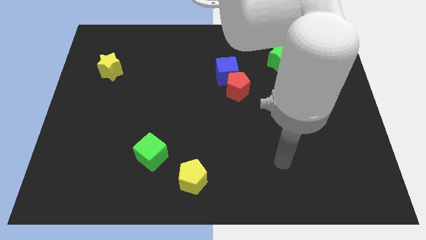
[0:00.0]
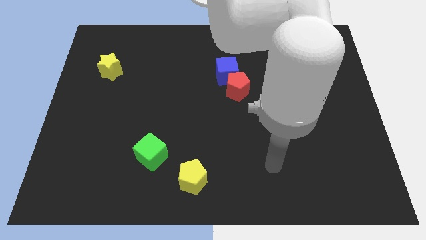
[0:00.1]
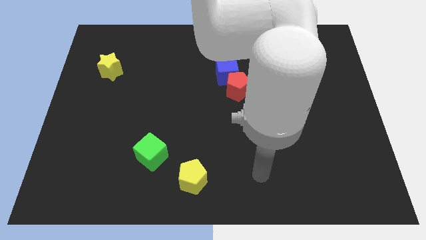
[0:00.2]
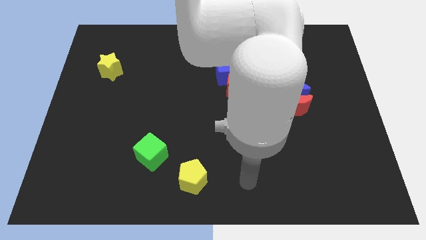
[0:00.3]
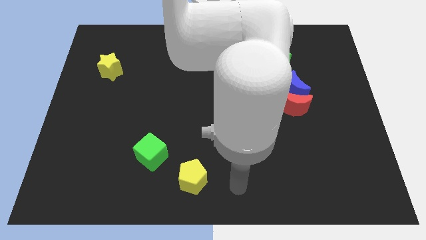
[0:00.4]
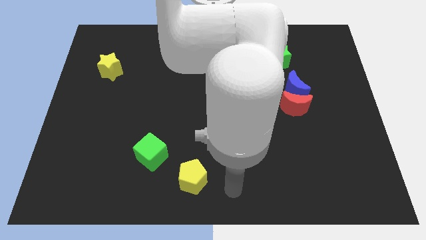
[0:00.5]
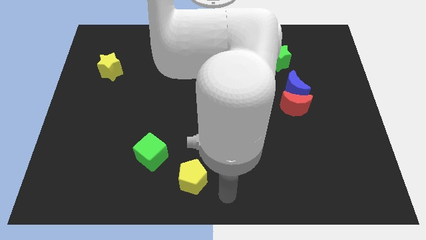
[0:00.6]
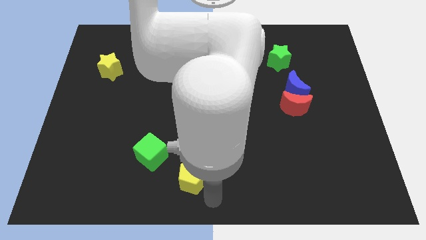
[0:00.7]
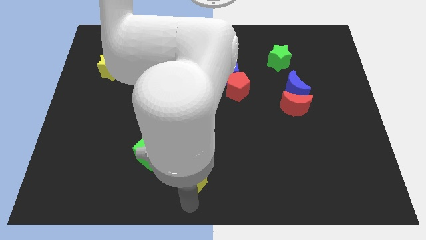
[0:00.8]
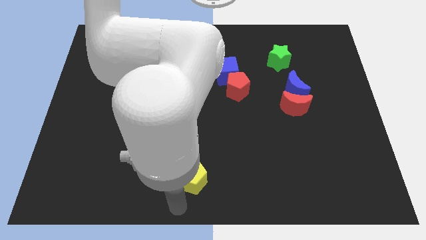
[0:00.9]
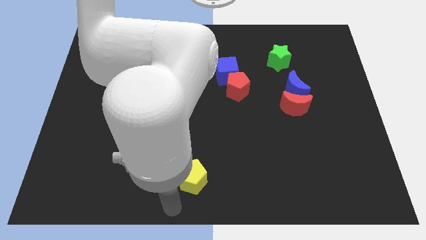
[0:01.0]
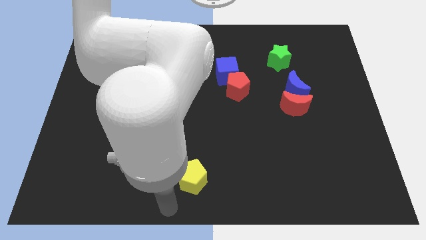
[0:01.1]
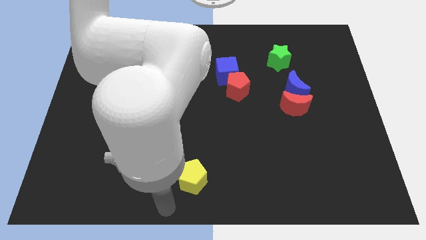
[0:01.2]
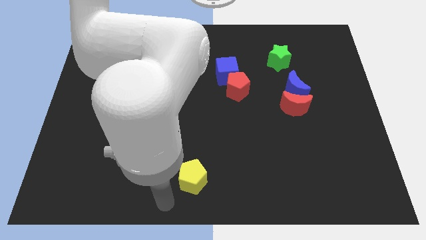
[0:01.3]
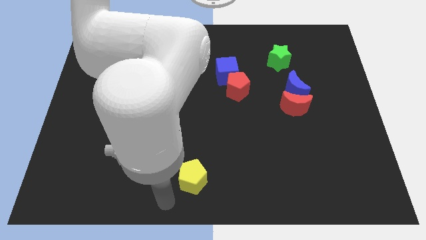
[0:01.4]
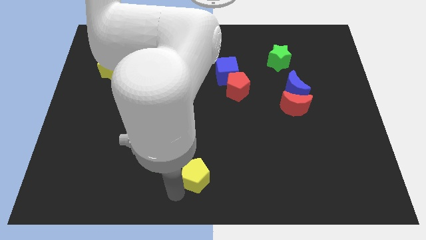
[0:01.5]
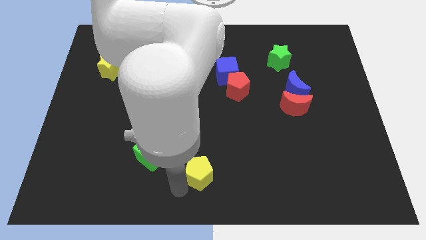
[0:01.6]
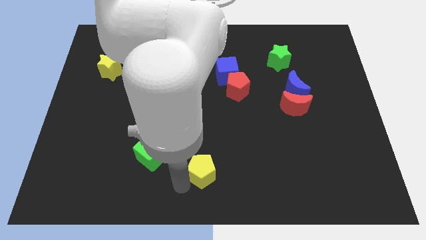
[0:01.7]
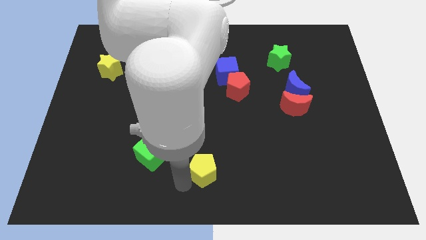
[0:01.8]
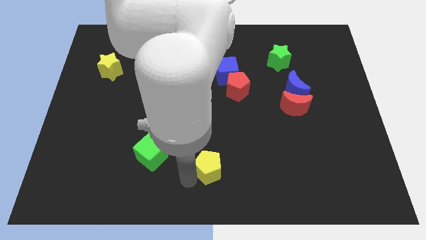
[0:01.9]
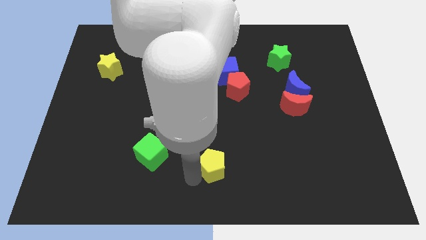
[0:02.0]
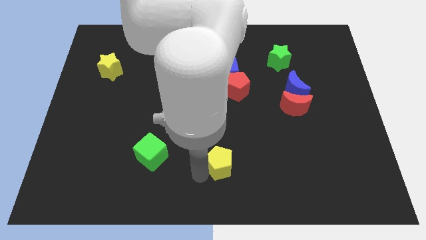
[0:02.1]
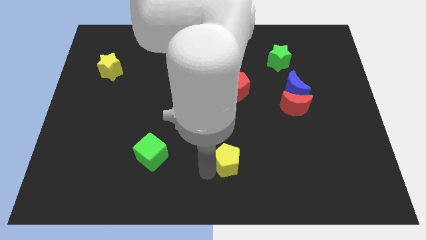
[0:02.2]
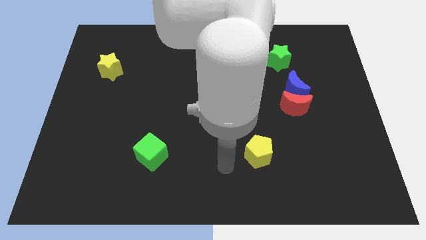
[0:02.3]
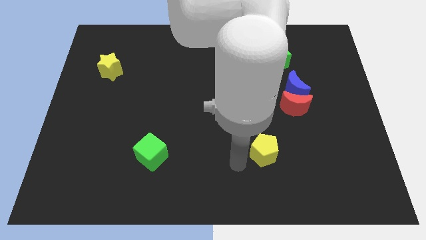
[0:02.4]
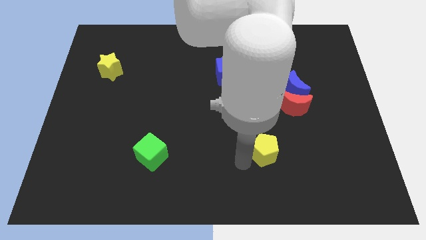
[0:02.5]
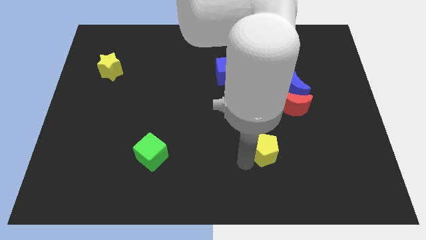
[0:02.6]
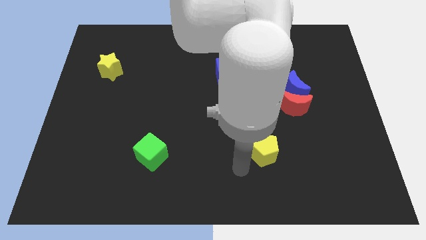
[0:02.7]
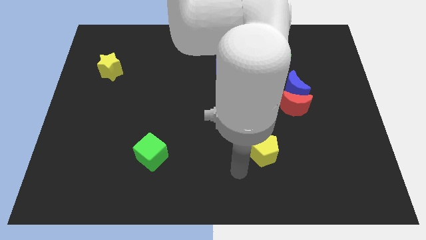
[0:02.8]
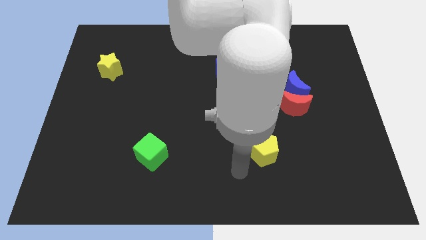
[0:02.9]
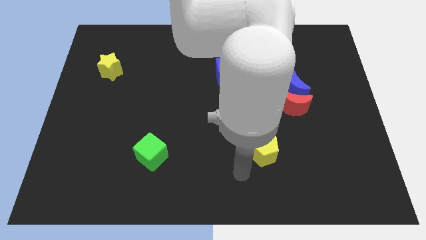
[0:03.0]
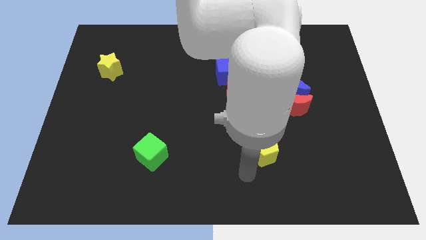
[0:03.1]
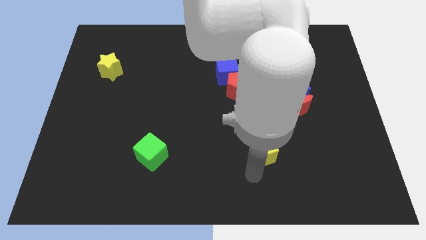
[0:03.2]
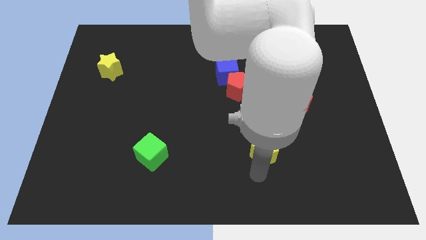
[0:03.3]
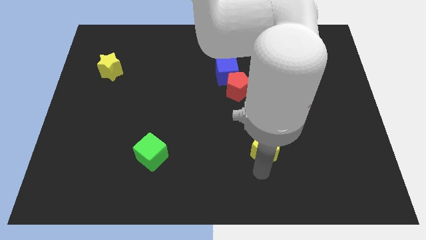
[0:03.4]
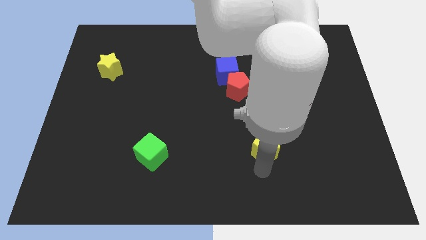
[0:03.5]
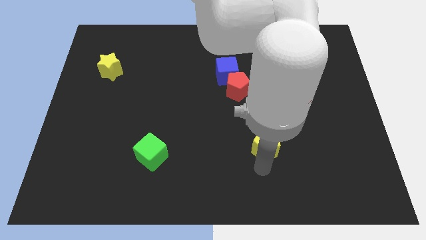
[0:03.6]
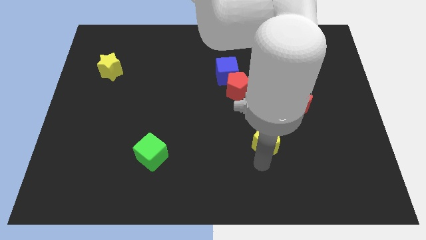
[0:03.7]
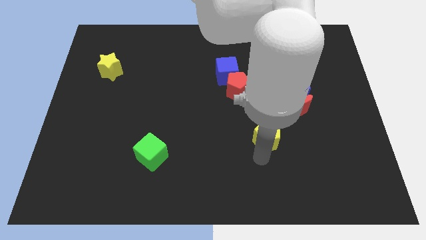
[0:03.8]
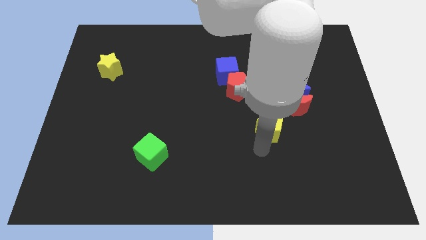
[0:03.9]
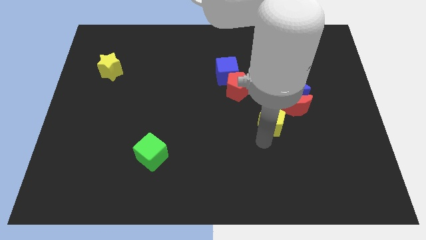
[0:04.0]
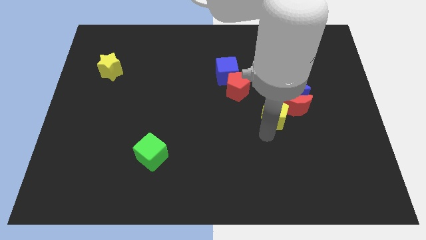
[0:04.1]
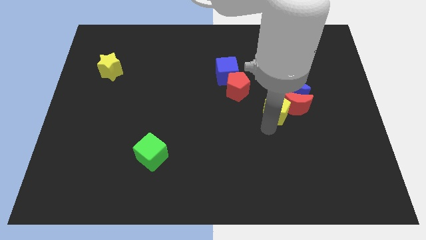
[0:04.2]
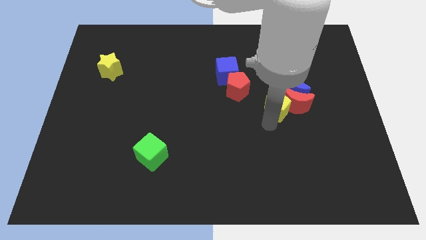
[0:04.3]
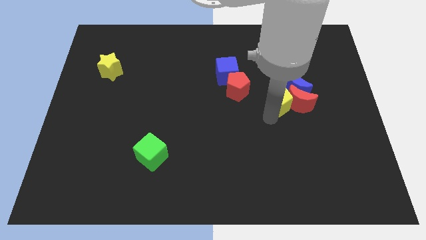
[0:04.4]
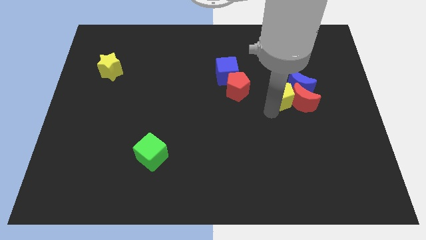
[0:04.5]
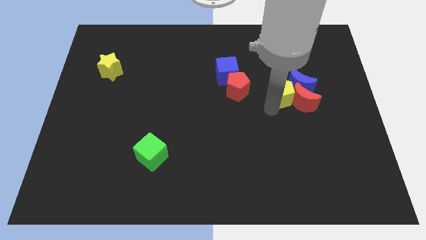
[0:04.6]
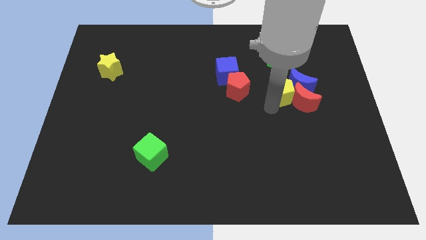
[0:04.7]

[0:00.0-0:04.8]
slide the yellow pentagon next to the blue moon

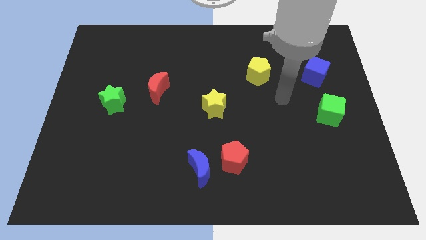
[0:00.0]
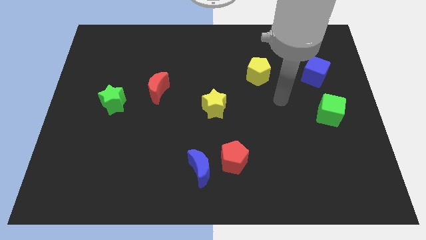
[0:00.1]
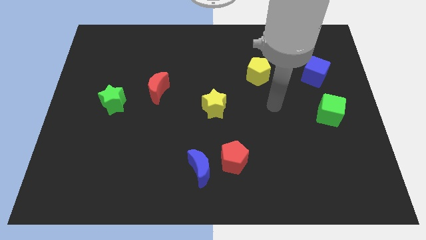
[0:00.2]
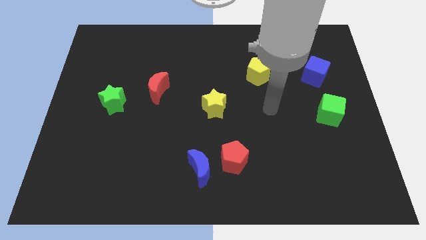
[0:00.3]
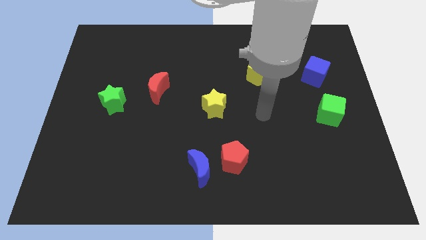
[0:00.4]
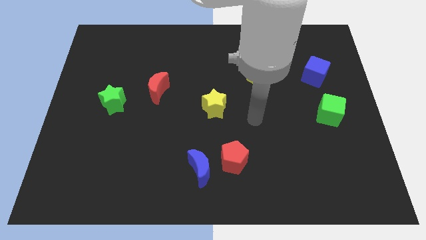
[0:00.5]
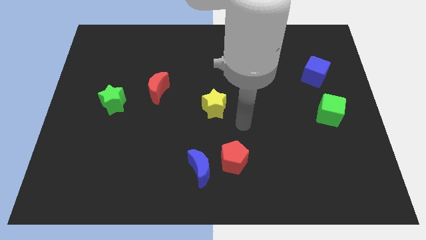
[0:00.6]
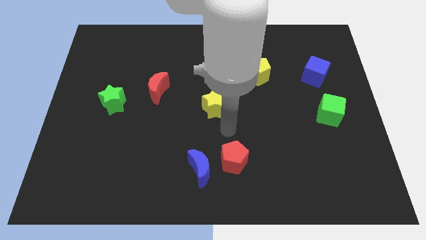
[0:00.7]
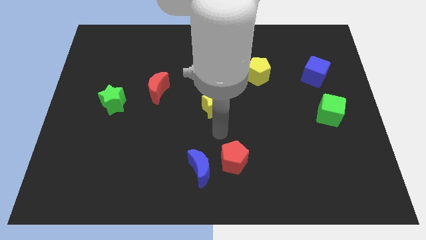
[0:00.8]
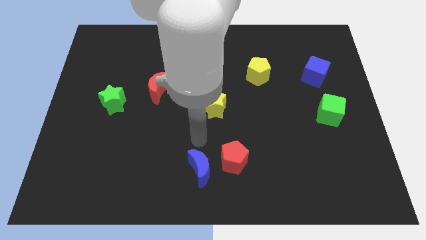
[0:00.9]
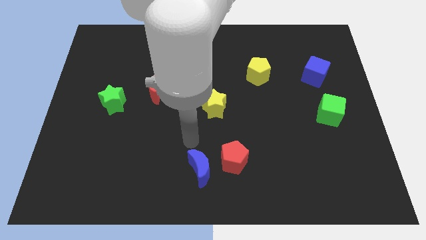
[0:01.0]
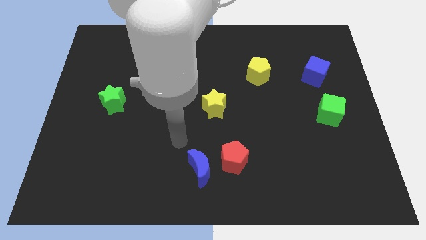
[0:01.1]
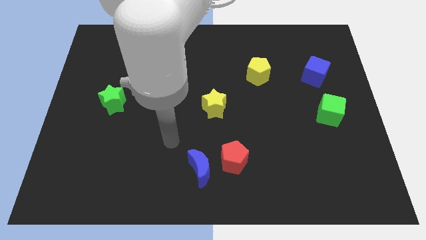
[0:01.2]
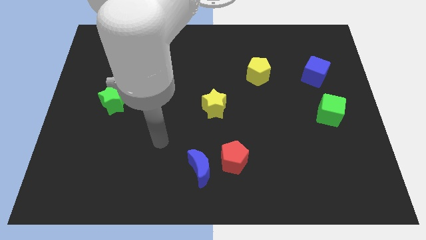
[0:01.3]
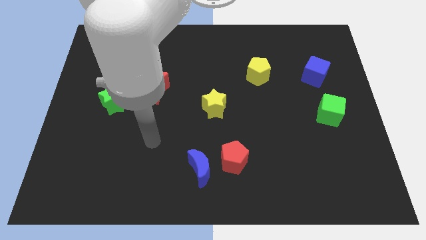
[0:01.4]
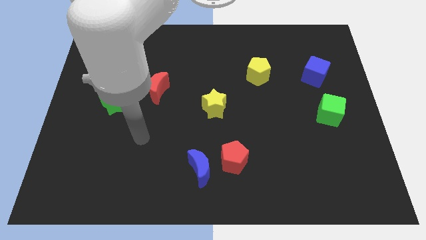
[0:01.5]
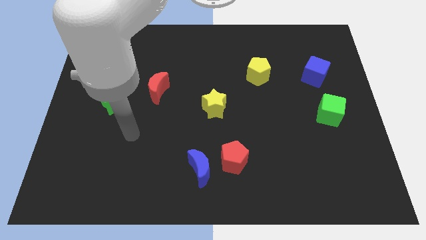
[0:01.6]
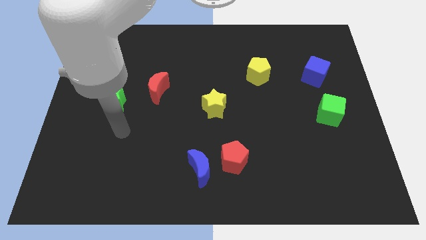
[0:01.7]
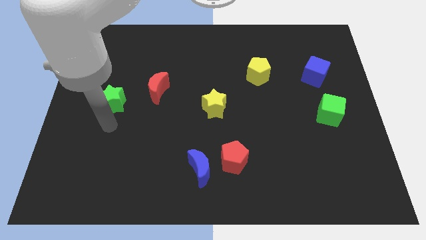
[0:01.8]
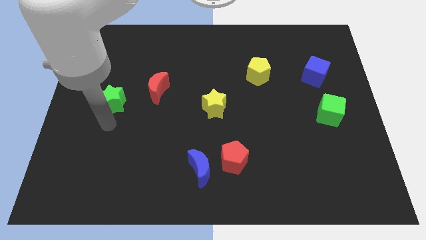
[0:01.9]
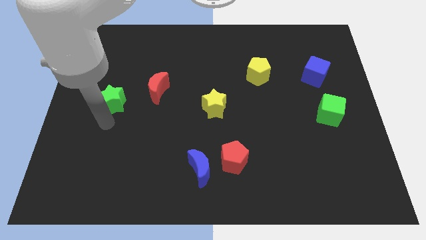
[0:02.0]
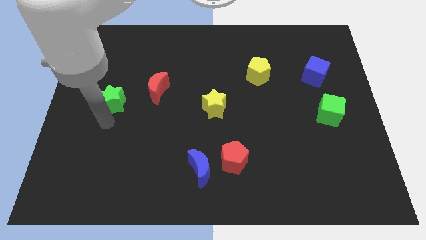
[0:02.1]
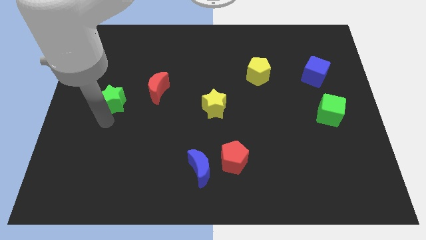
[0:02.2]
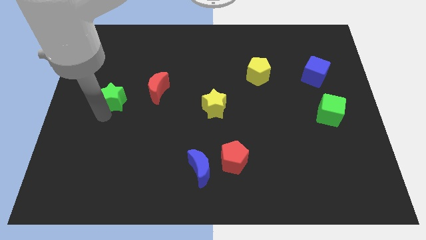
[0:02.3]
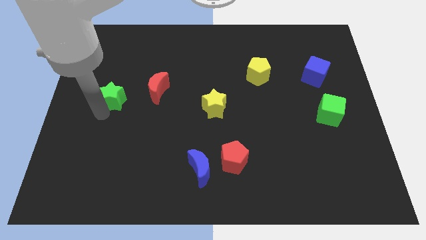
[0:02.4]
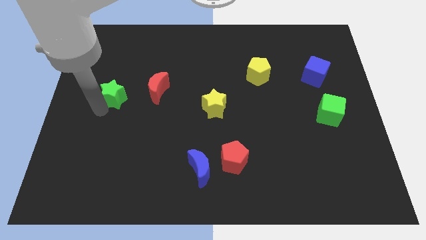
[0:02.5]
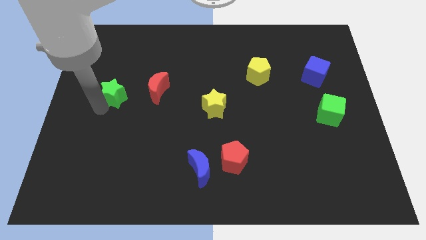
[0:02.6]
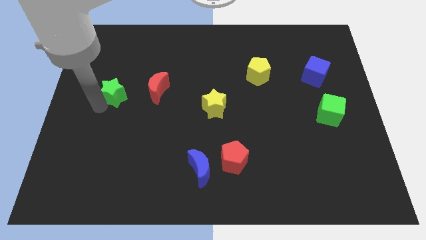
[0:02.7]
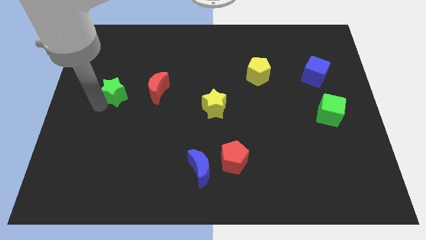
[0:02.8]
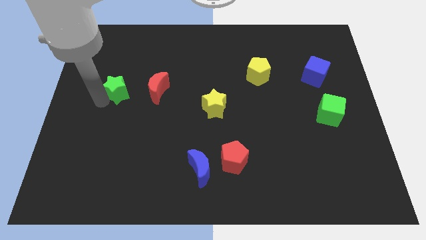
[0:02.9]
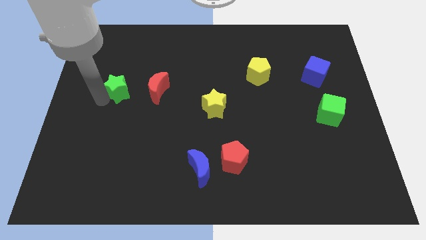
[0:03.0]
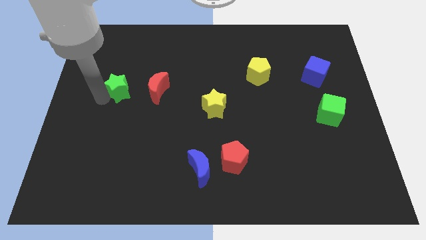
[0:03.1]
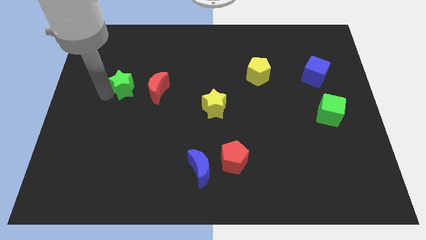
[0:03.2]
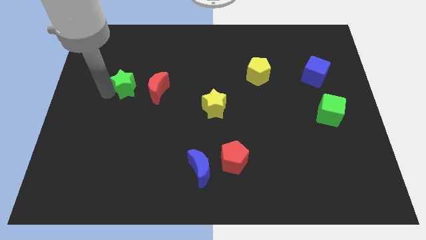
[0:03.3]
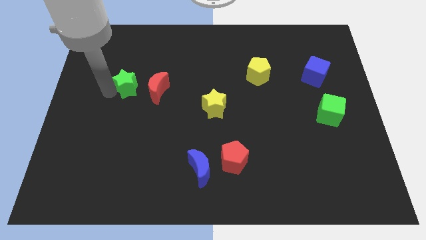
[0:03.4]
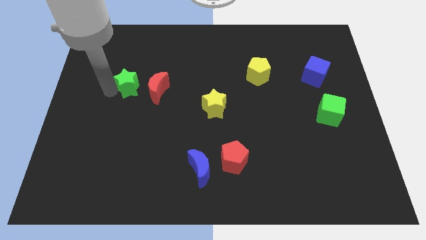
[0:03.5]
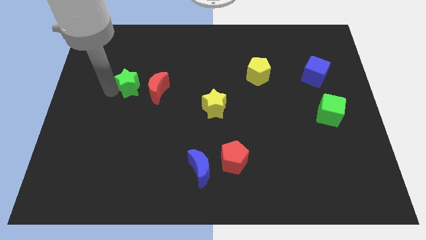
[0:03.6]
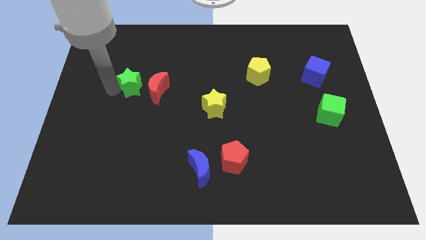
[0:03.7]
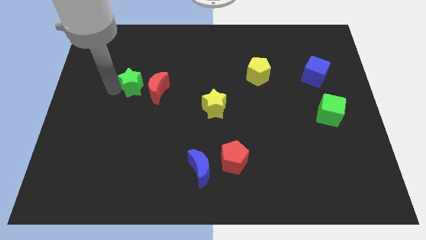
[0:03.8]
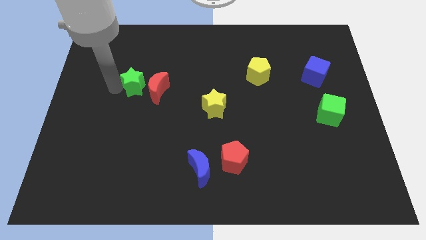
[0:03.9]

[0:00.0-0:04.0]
slide the green star close to the red moon
